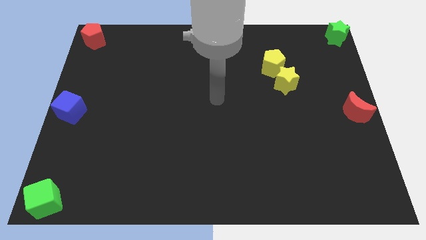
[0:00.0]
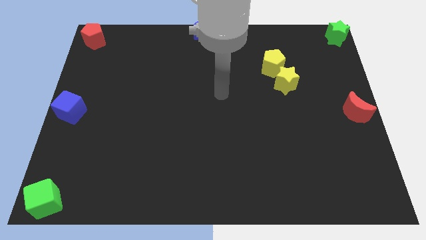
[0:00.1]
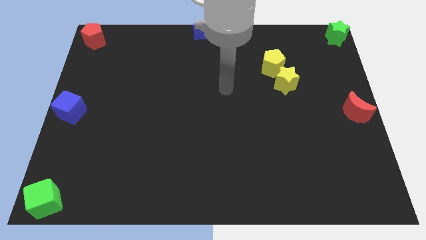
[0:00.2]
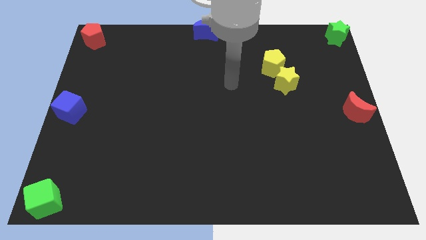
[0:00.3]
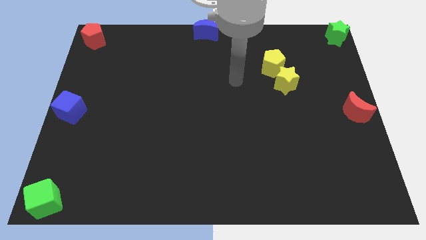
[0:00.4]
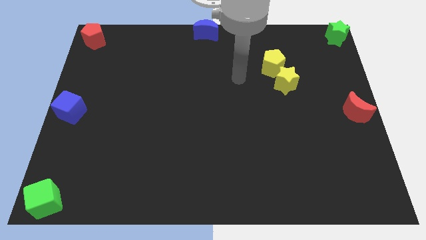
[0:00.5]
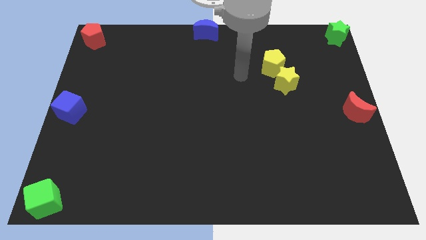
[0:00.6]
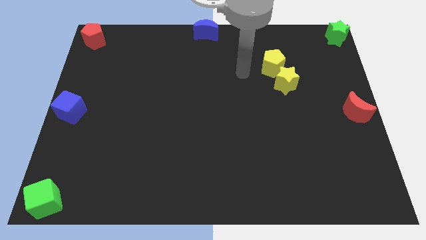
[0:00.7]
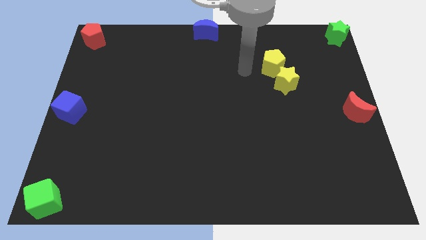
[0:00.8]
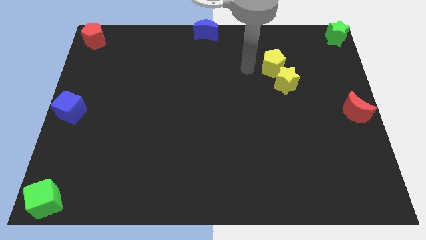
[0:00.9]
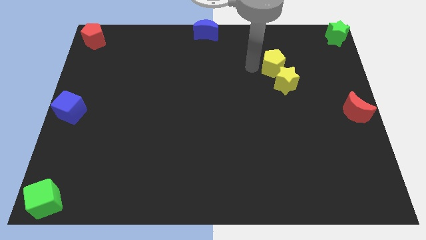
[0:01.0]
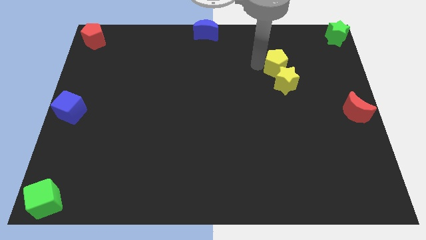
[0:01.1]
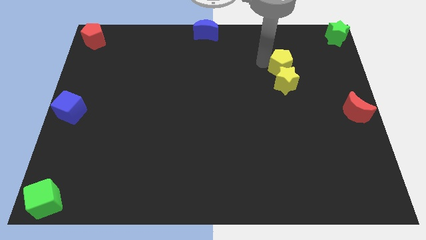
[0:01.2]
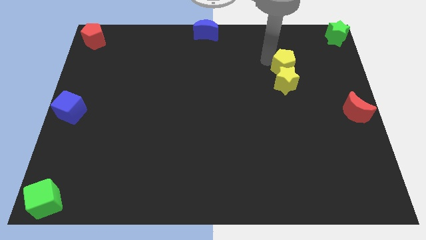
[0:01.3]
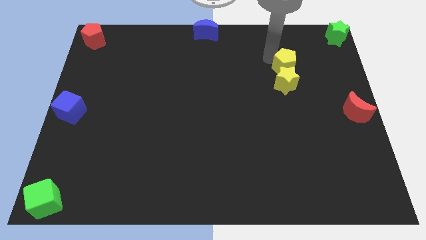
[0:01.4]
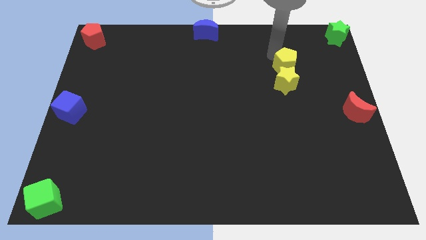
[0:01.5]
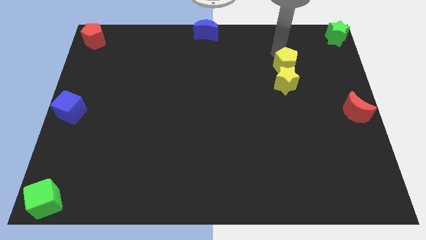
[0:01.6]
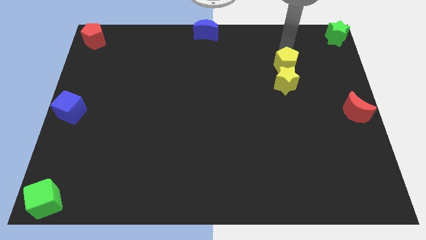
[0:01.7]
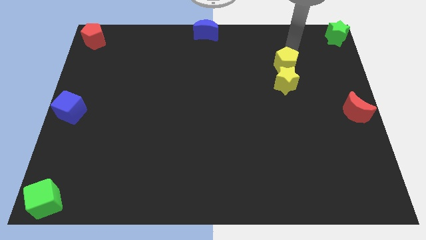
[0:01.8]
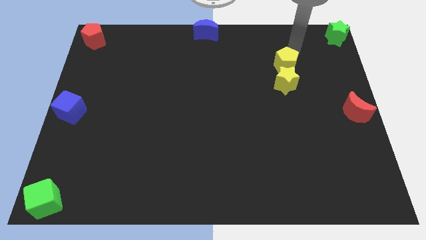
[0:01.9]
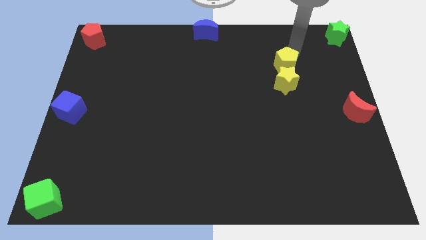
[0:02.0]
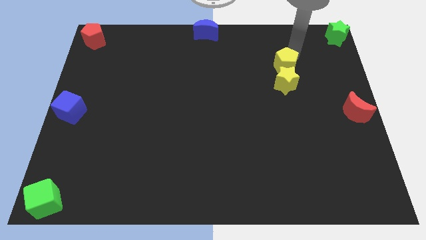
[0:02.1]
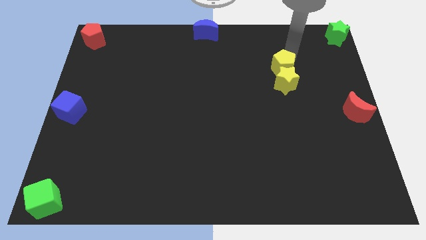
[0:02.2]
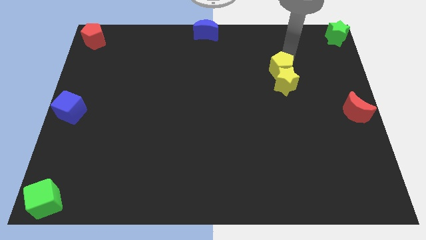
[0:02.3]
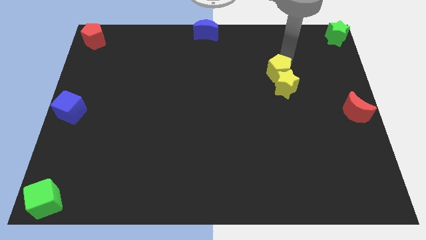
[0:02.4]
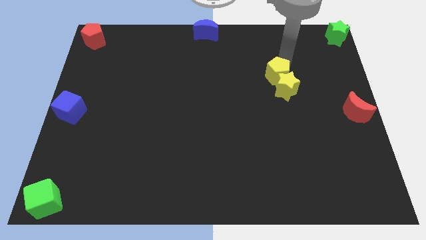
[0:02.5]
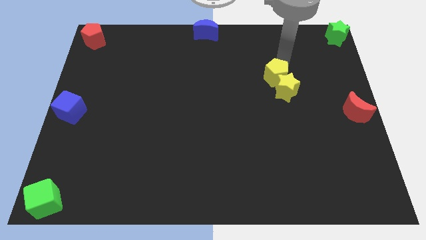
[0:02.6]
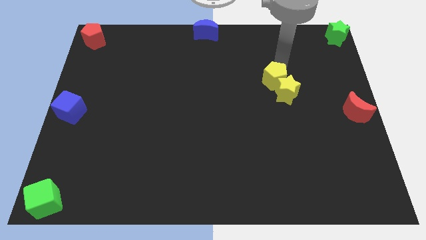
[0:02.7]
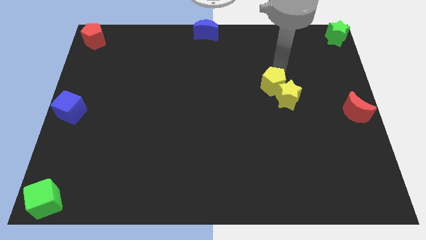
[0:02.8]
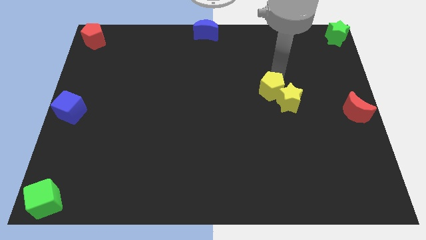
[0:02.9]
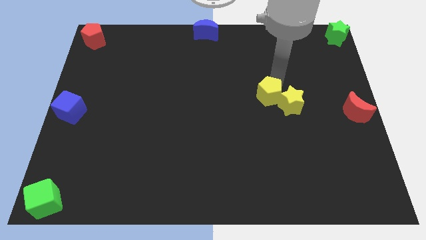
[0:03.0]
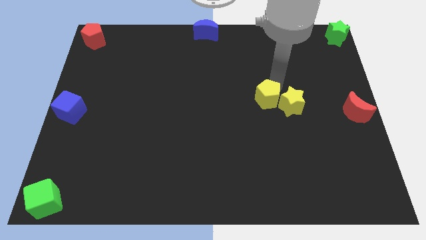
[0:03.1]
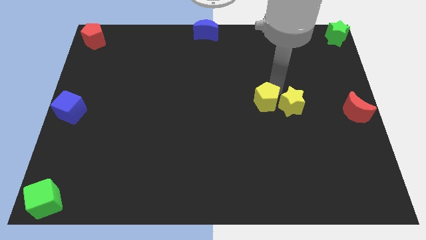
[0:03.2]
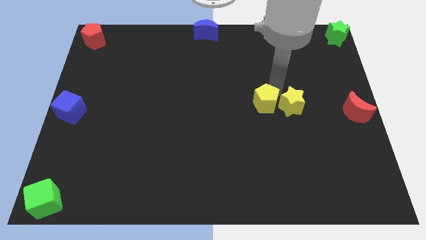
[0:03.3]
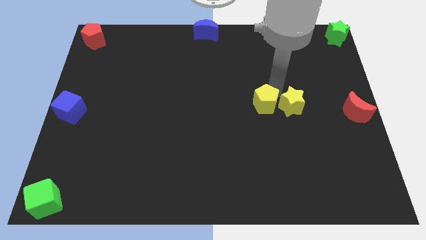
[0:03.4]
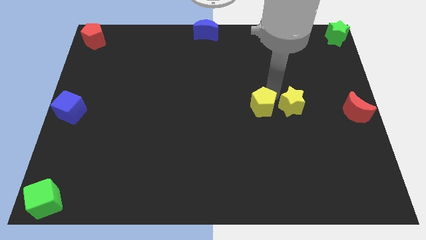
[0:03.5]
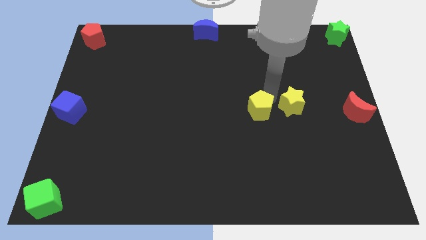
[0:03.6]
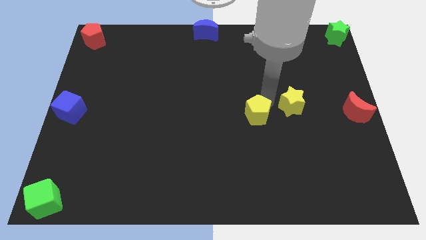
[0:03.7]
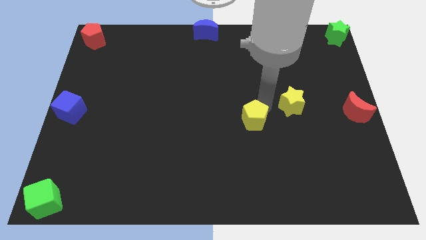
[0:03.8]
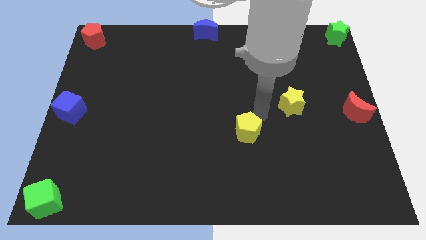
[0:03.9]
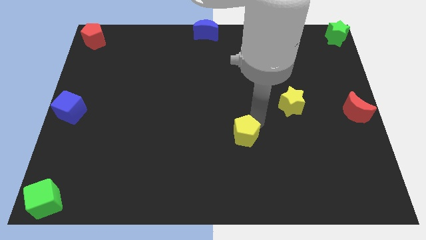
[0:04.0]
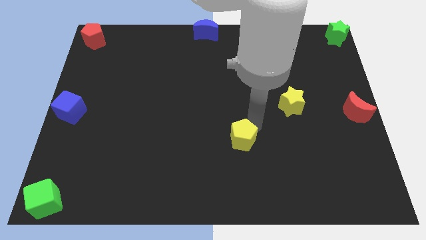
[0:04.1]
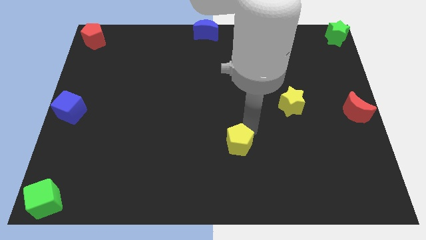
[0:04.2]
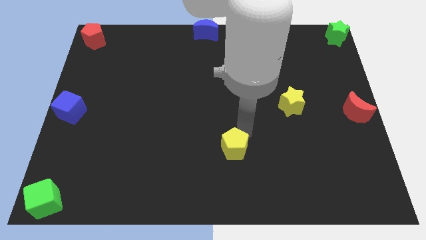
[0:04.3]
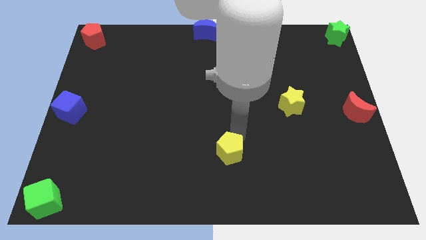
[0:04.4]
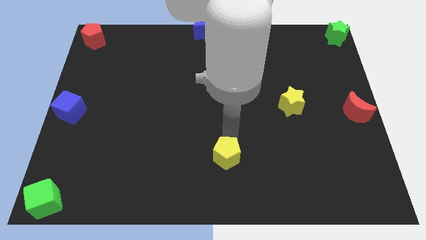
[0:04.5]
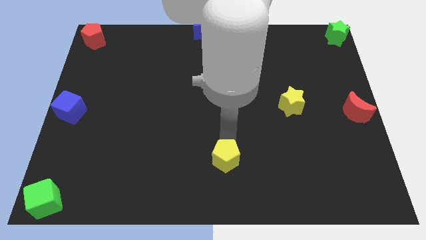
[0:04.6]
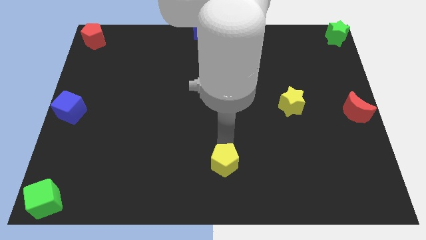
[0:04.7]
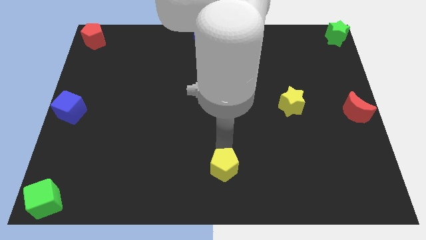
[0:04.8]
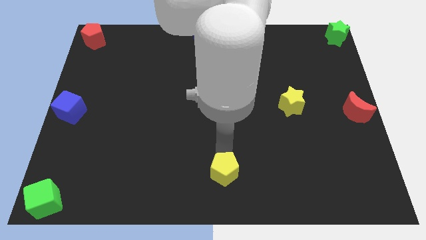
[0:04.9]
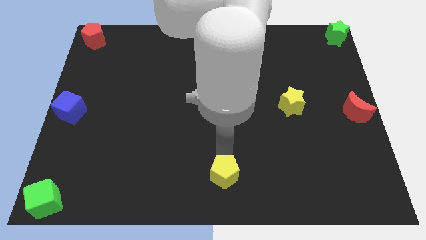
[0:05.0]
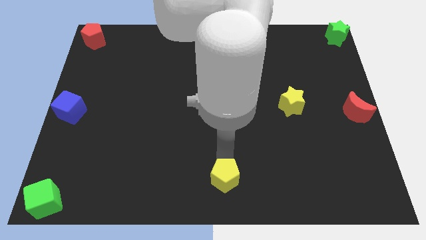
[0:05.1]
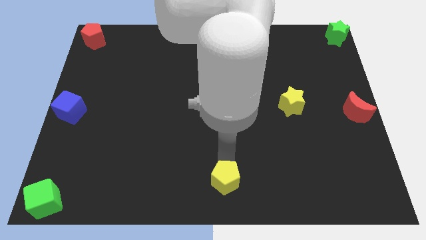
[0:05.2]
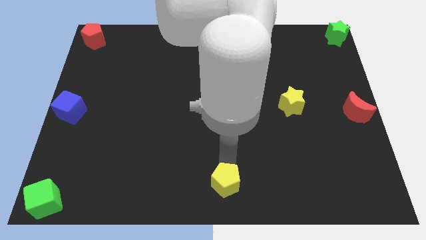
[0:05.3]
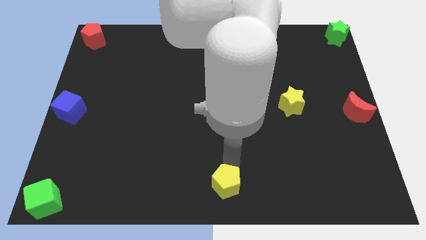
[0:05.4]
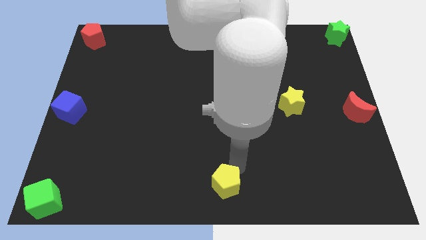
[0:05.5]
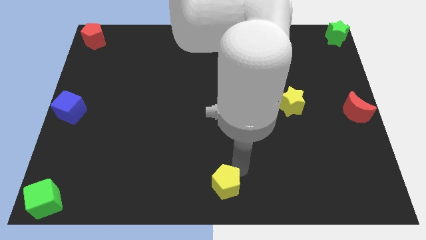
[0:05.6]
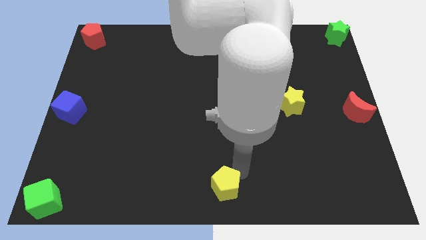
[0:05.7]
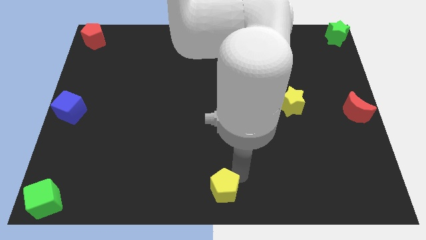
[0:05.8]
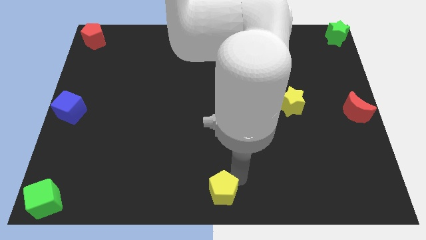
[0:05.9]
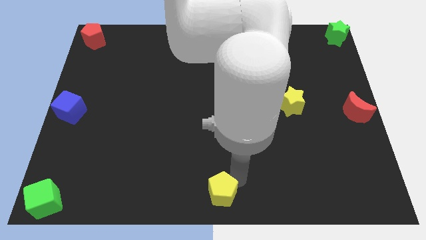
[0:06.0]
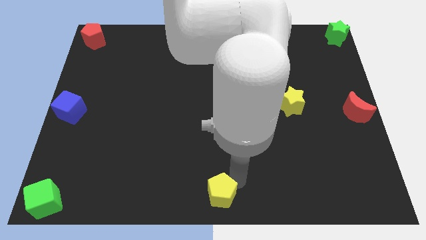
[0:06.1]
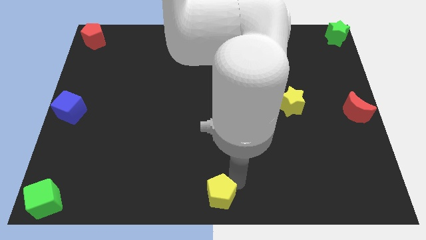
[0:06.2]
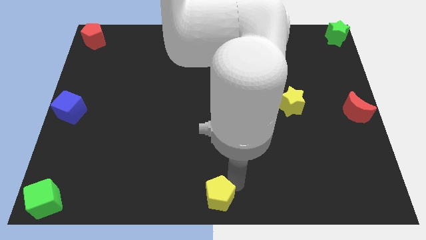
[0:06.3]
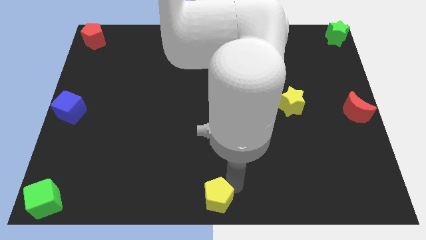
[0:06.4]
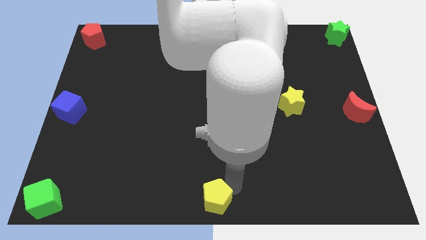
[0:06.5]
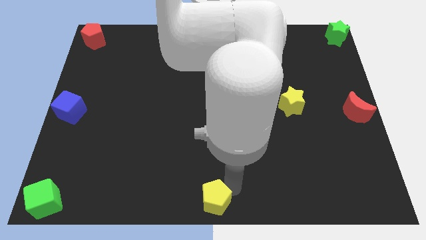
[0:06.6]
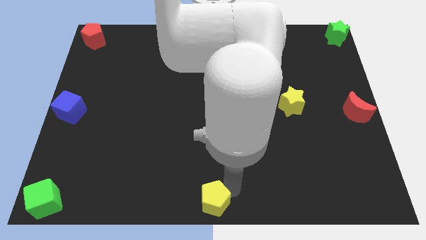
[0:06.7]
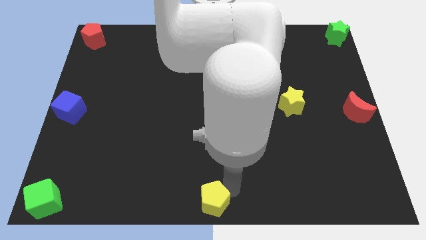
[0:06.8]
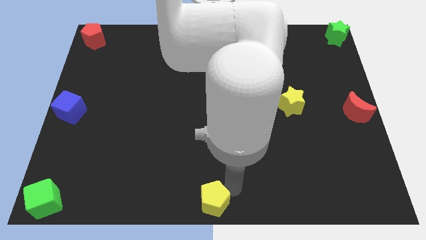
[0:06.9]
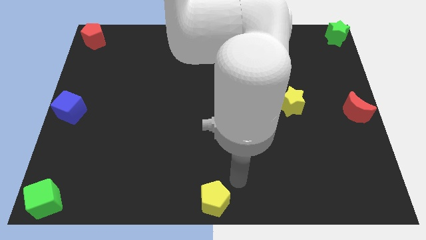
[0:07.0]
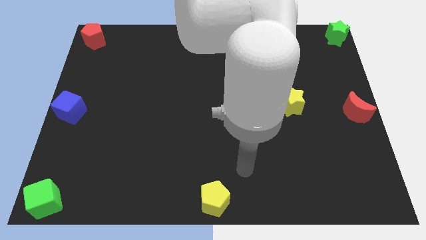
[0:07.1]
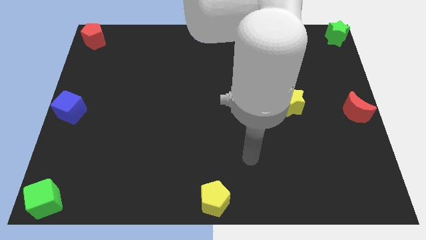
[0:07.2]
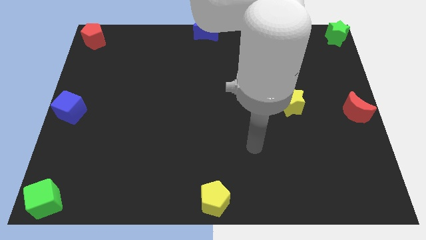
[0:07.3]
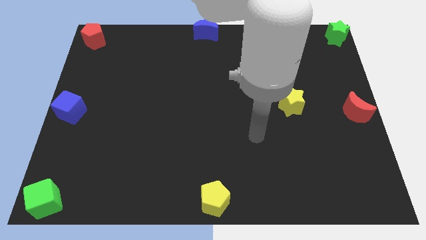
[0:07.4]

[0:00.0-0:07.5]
push the yellow pentagon towards bottom center of the board

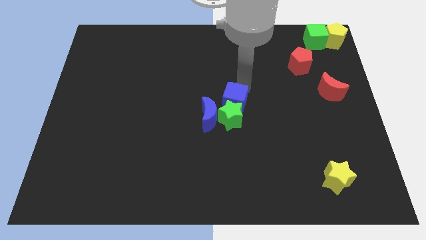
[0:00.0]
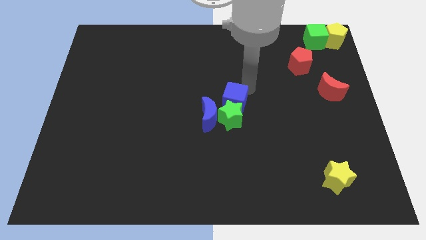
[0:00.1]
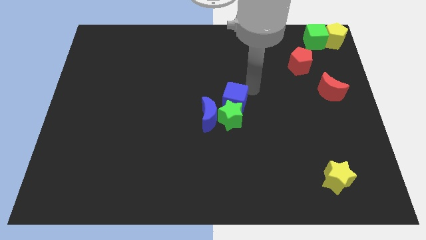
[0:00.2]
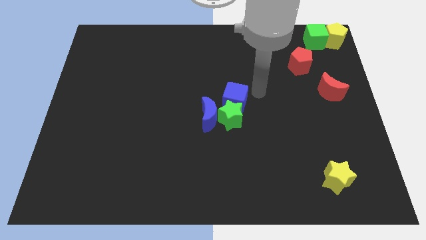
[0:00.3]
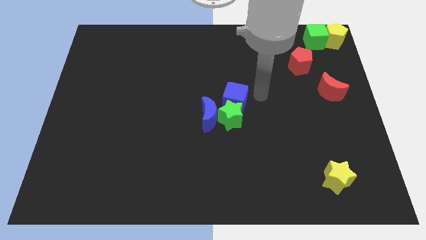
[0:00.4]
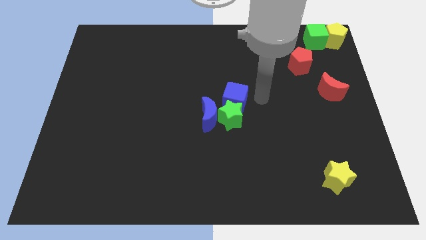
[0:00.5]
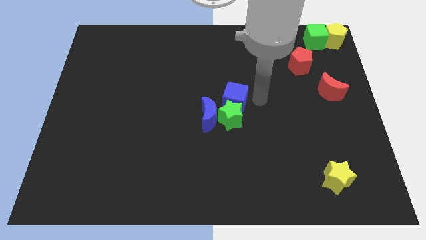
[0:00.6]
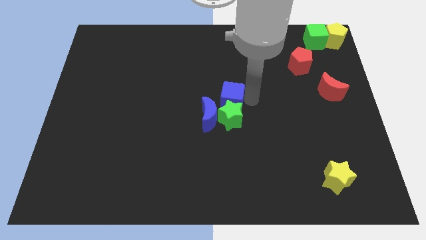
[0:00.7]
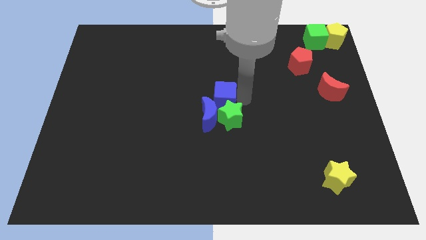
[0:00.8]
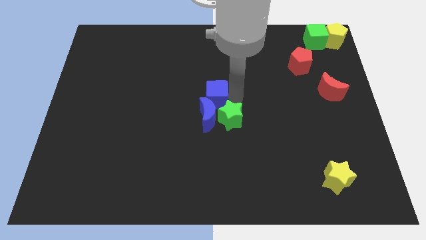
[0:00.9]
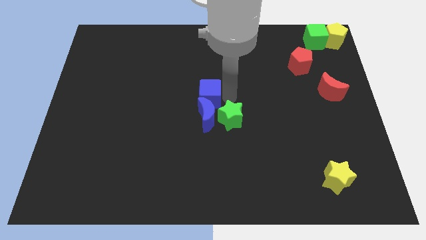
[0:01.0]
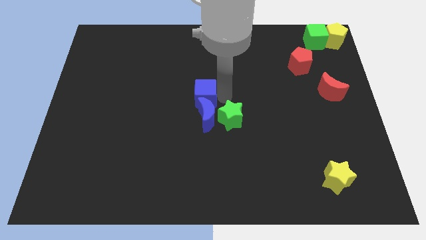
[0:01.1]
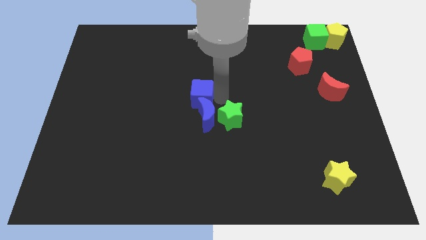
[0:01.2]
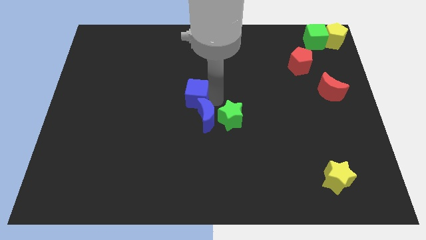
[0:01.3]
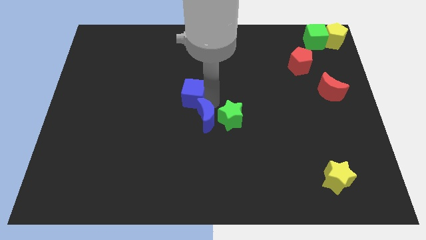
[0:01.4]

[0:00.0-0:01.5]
push the blue cube above the blue crescent

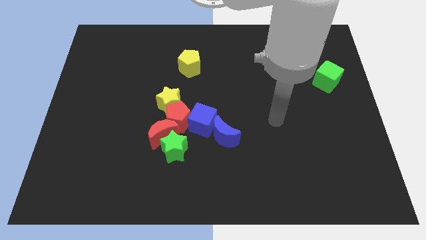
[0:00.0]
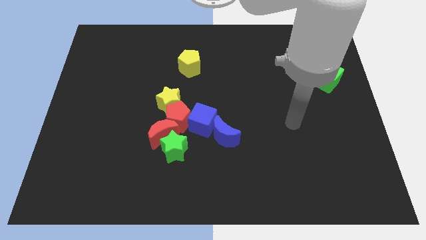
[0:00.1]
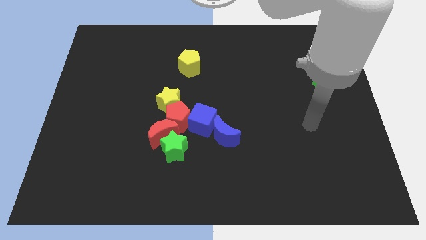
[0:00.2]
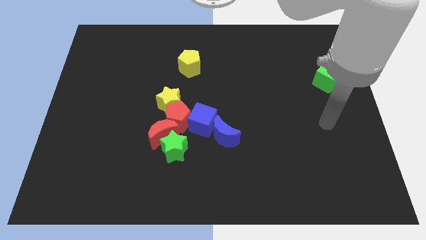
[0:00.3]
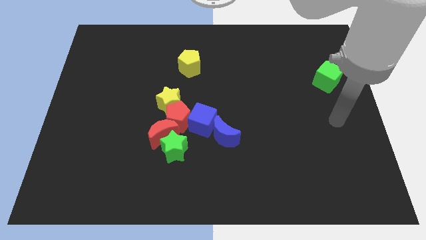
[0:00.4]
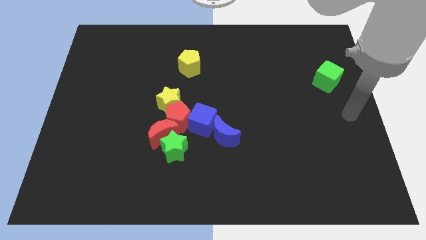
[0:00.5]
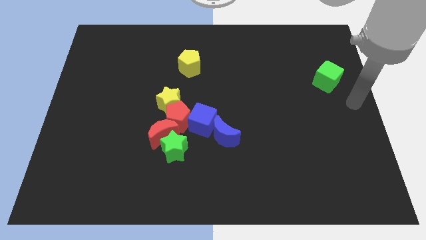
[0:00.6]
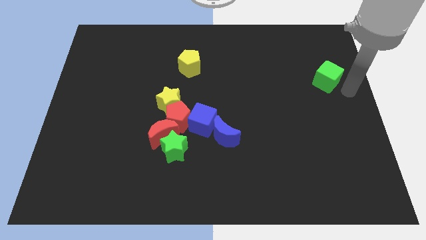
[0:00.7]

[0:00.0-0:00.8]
place arm on the bottom right of green cube
